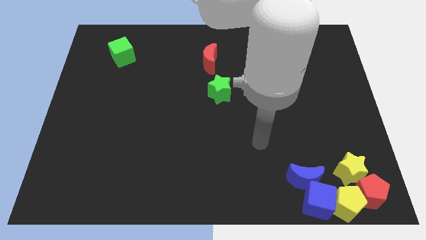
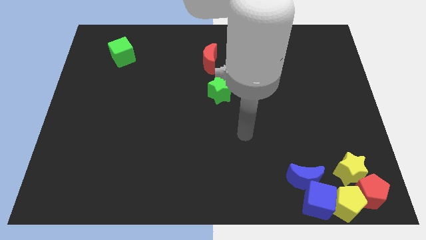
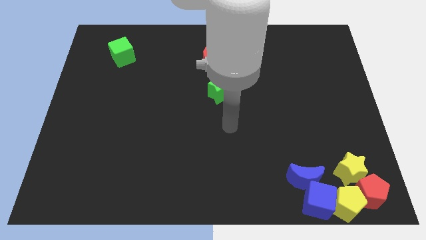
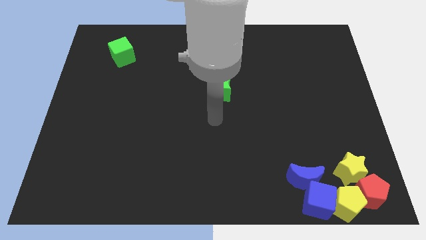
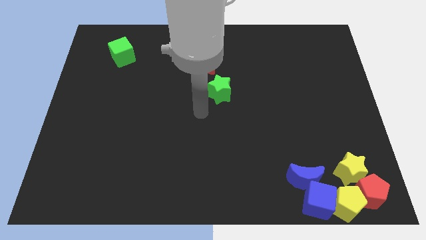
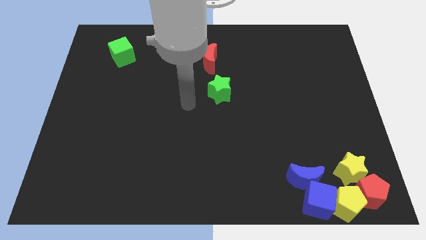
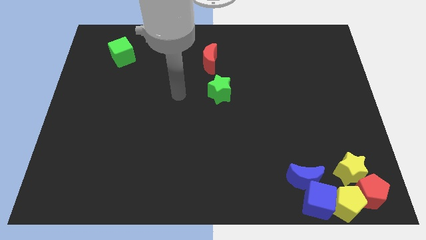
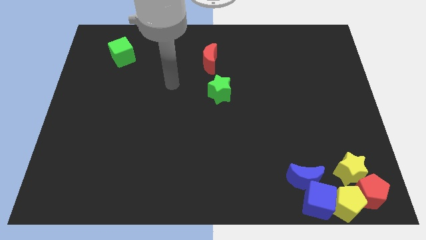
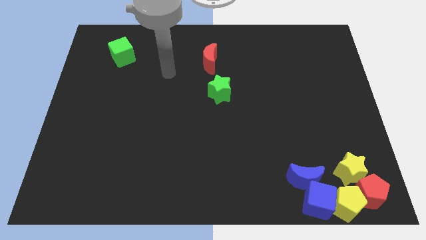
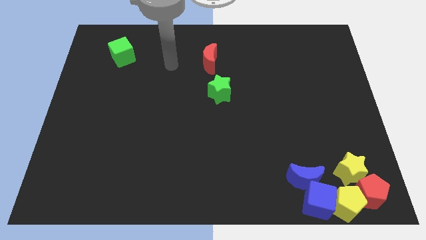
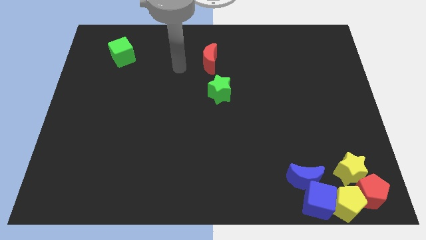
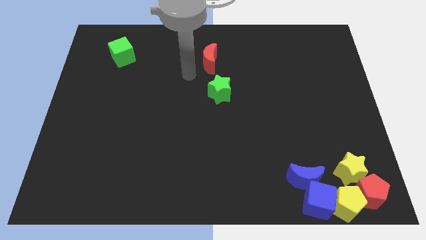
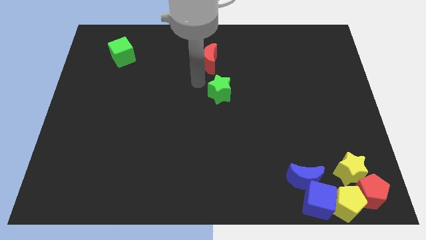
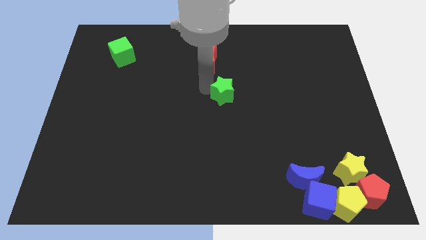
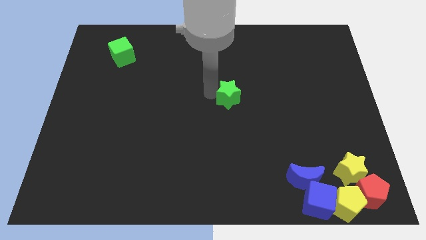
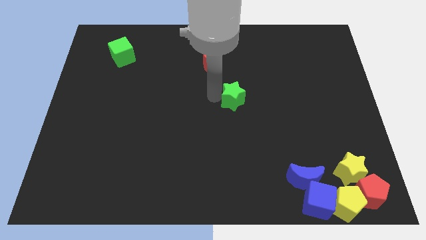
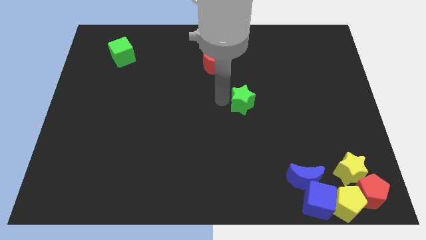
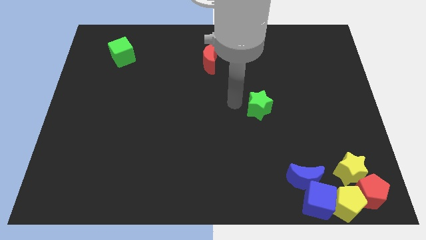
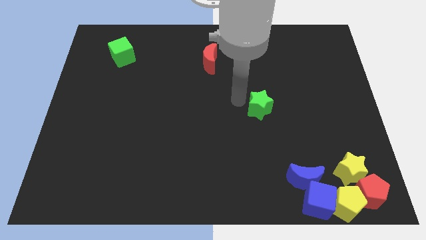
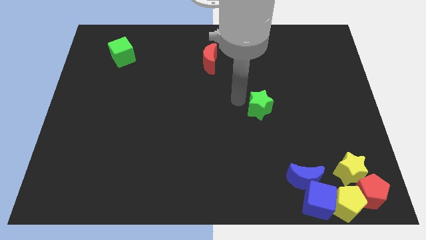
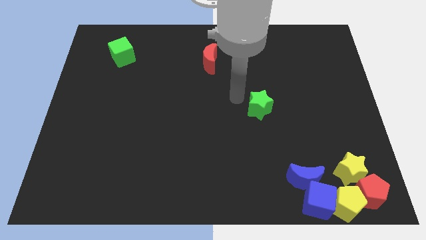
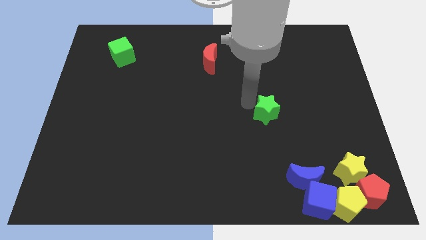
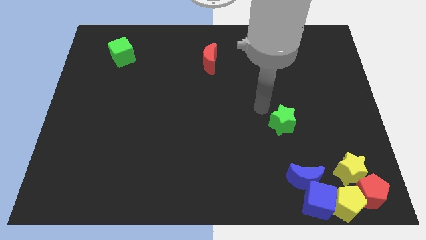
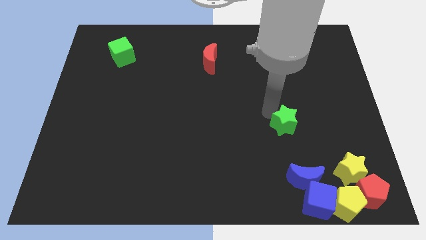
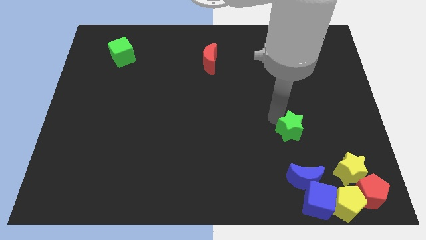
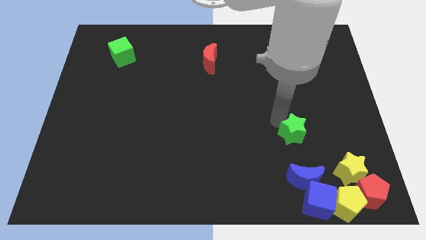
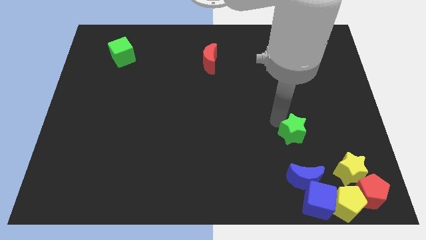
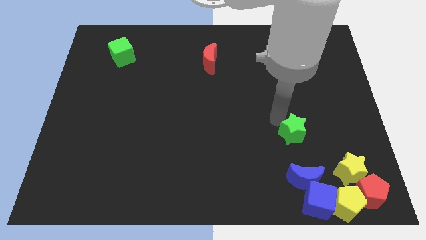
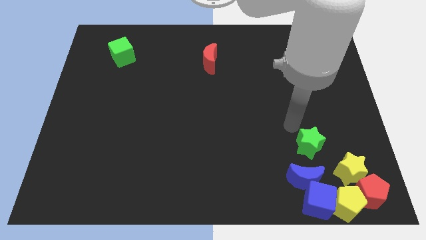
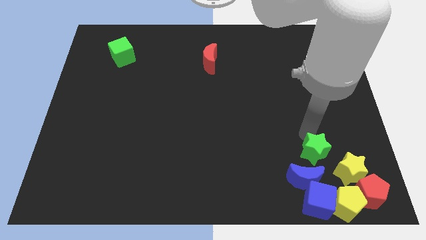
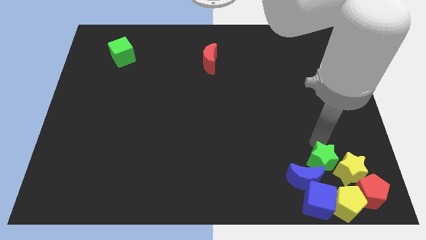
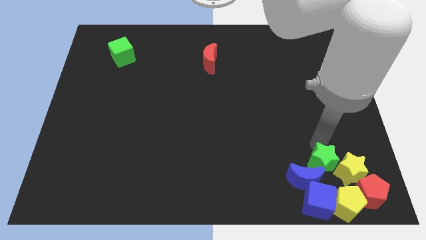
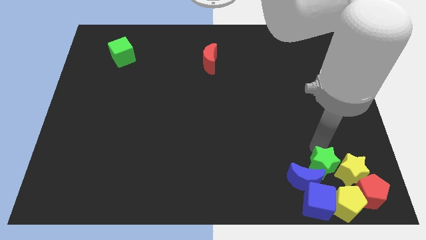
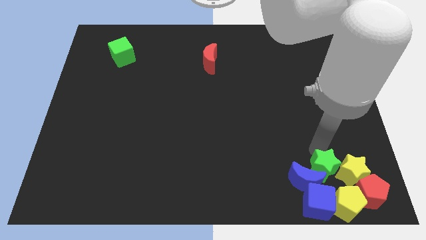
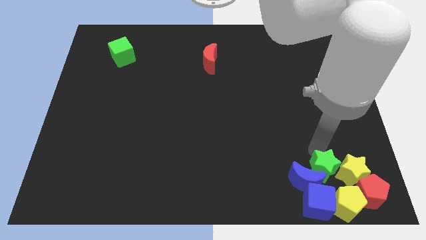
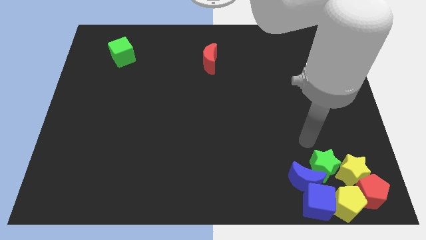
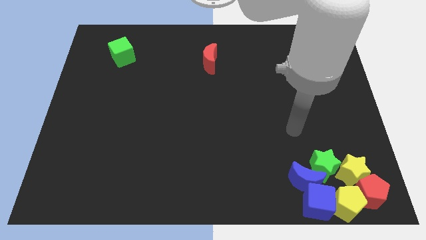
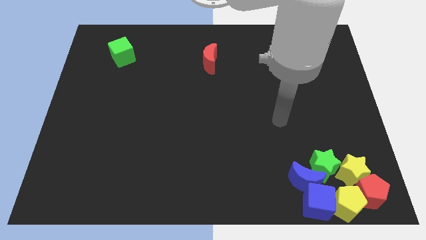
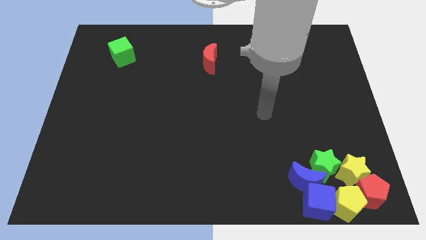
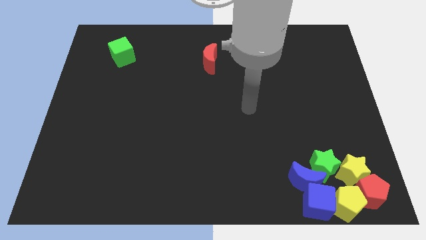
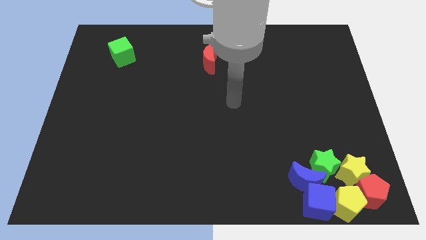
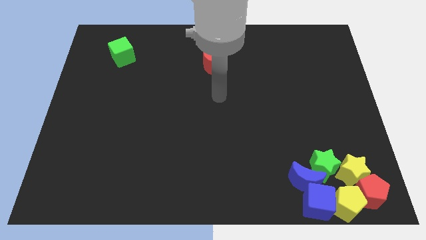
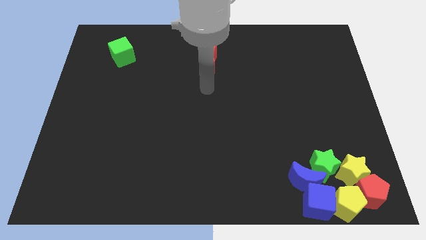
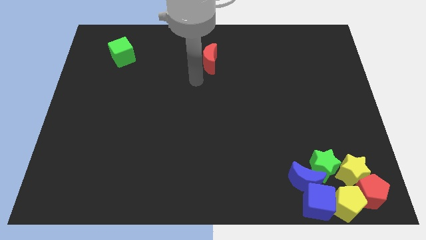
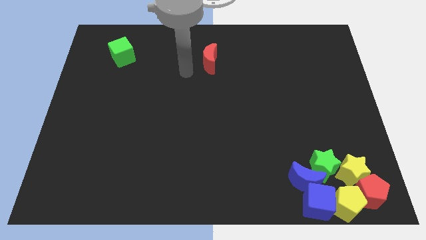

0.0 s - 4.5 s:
move the green star into the blue moon

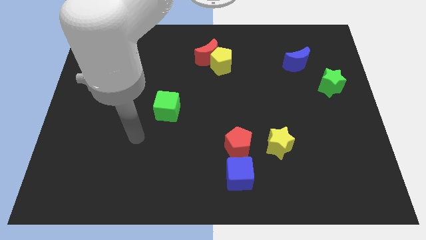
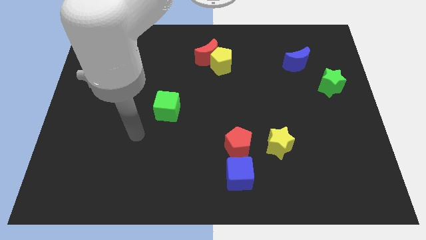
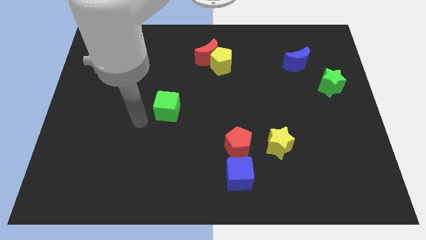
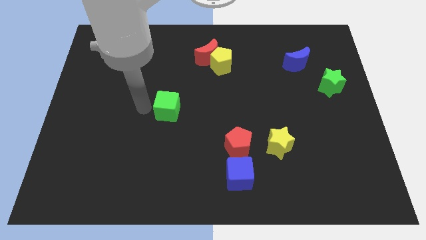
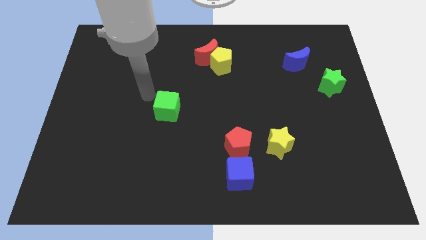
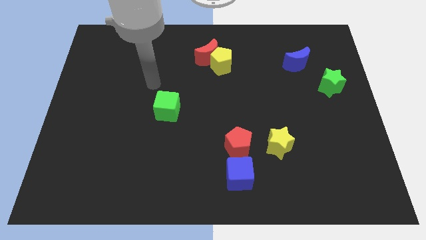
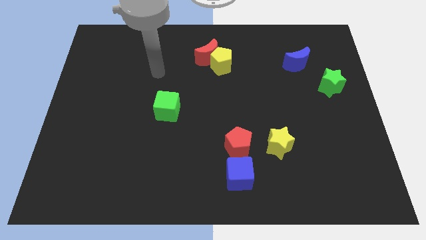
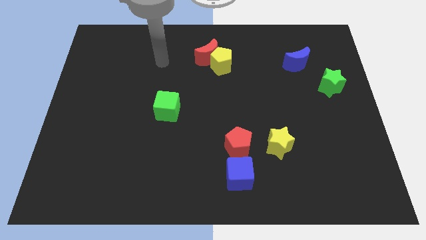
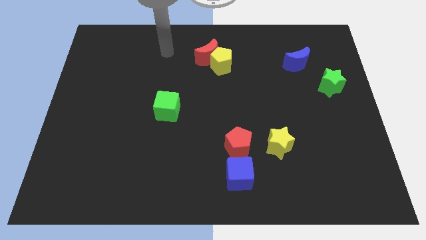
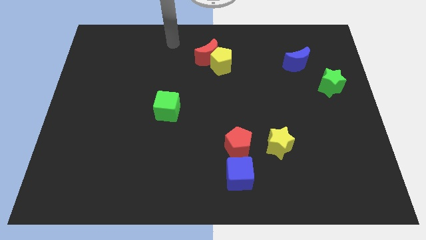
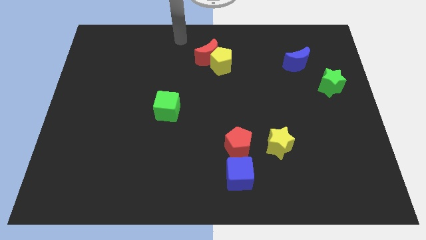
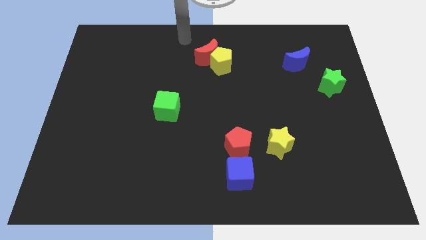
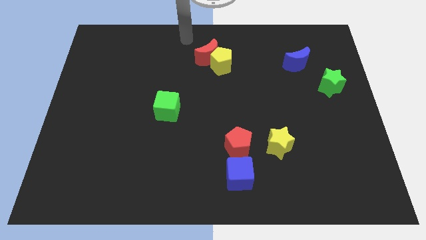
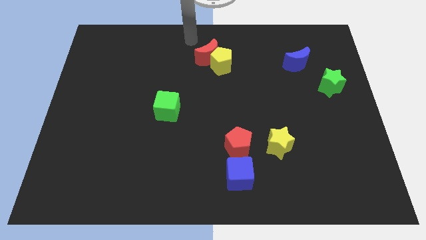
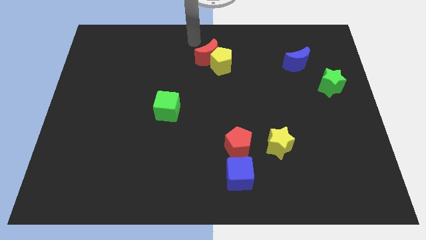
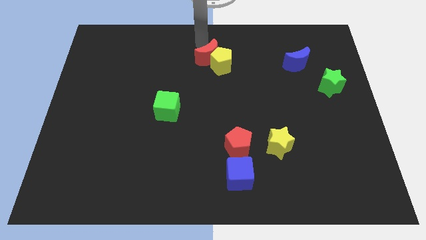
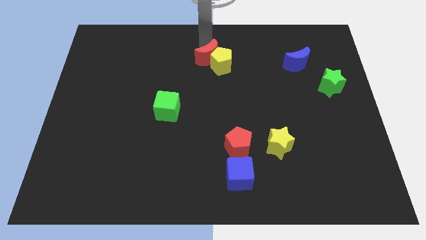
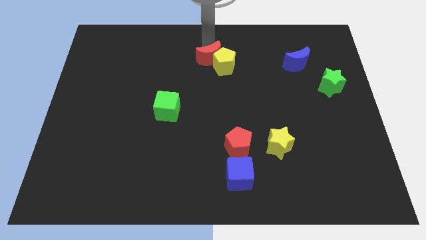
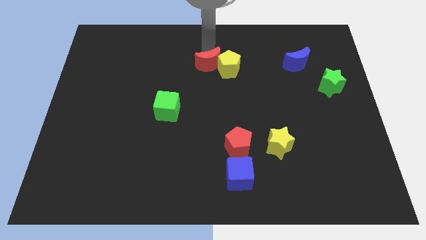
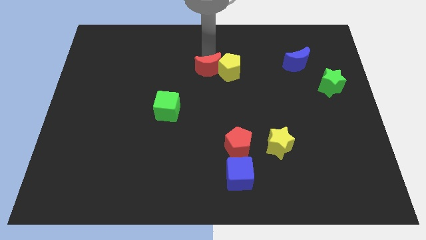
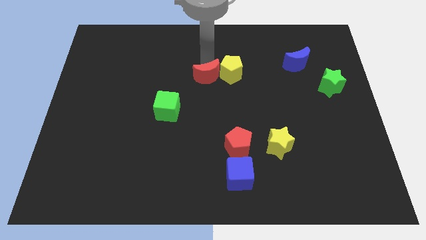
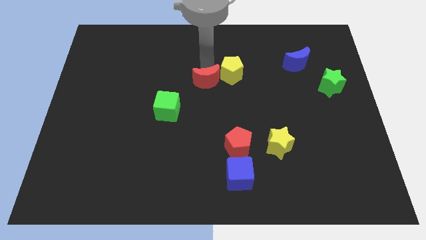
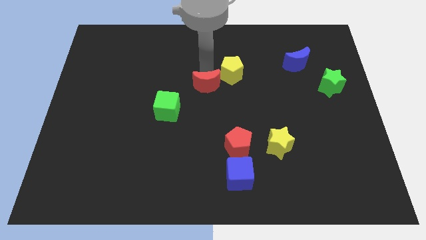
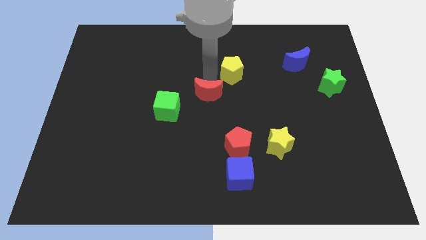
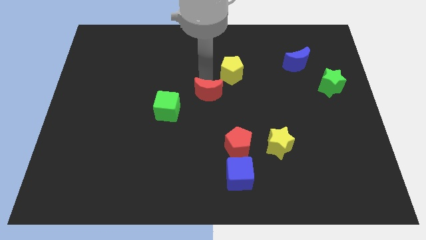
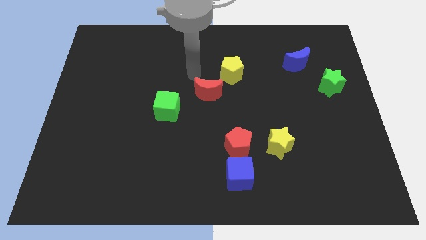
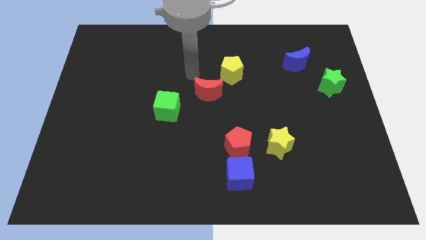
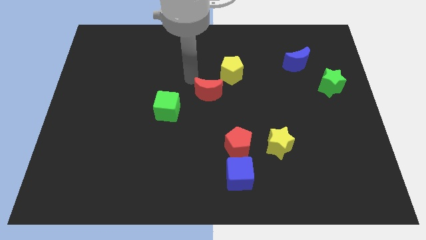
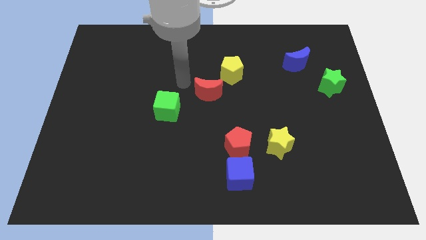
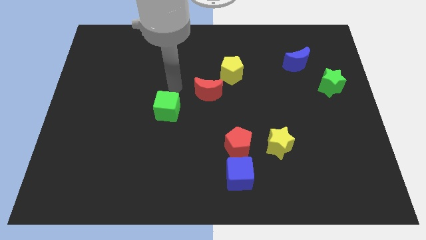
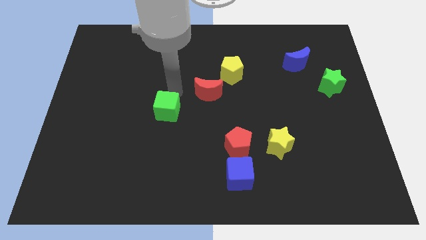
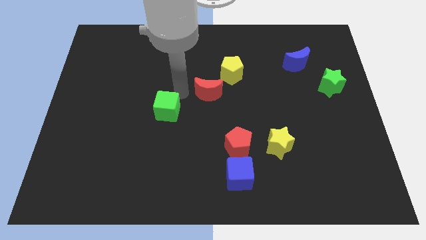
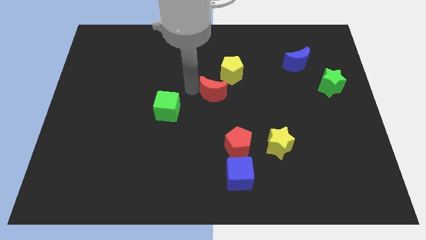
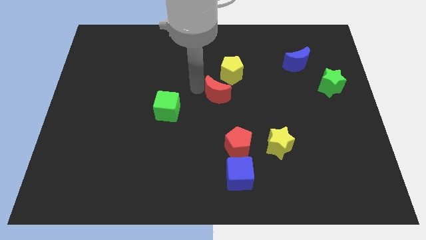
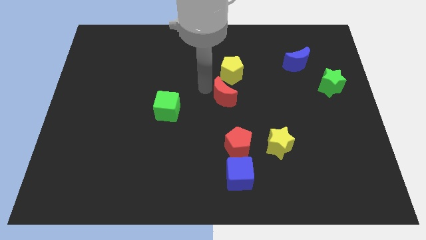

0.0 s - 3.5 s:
separate the red moon from the yellow pentagon

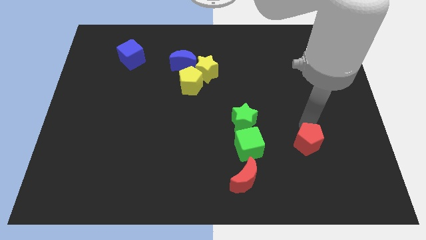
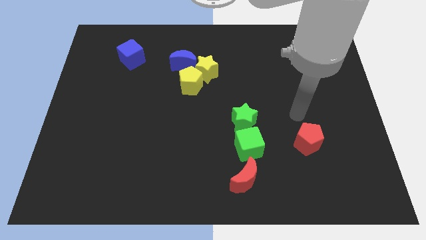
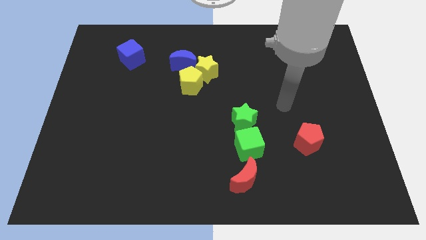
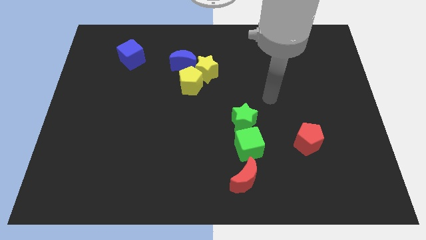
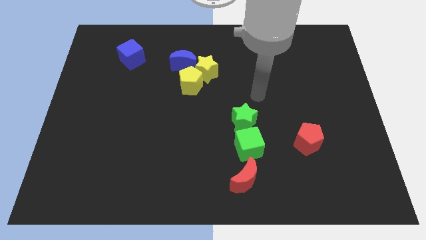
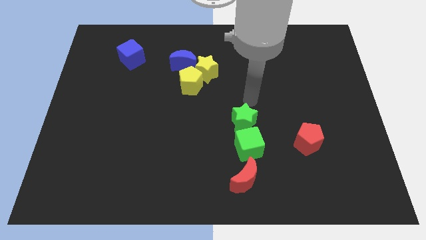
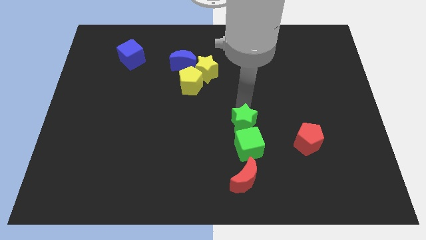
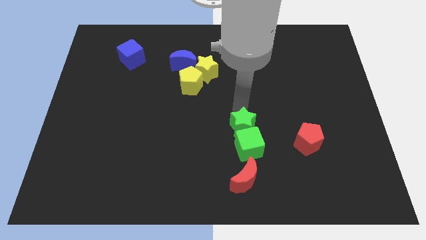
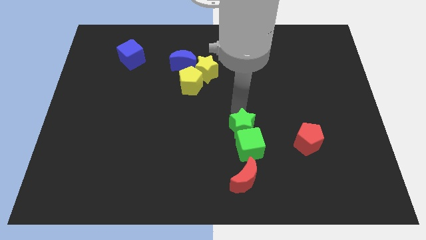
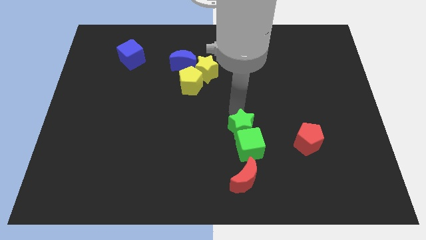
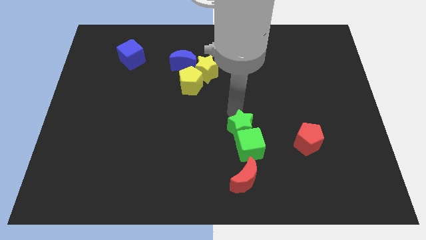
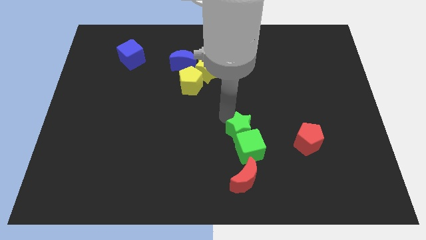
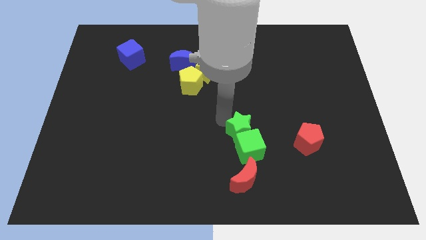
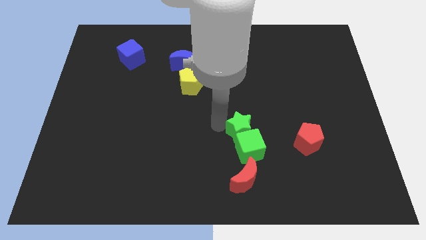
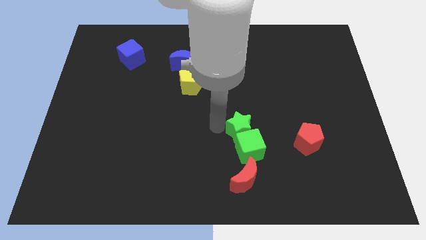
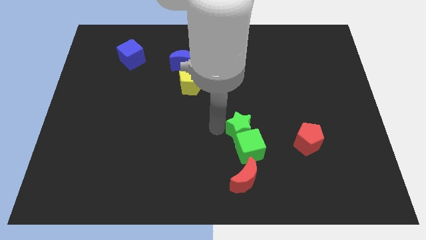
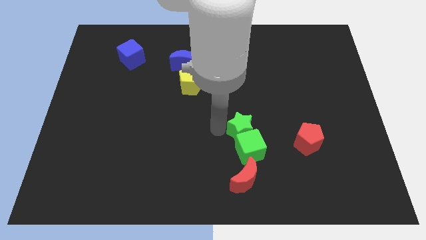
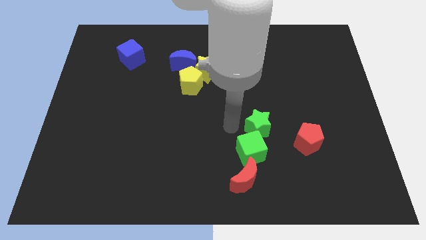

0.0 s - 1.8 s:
push green star into green cube
